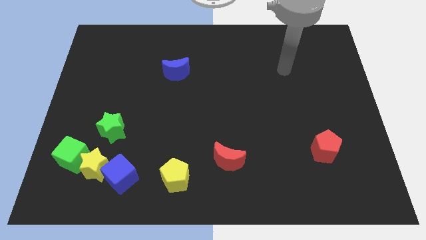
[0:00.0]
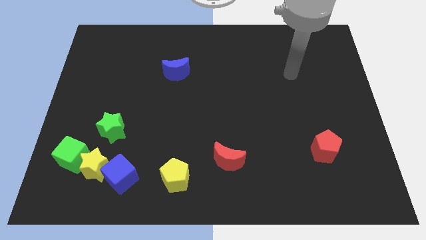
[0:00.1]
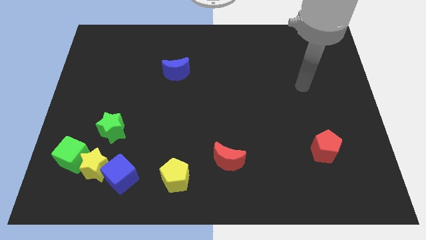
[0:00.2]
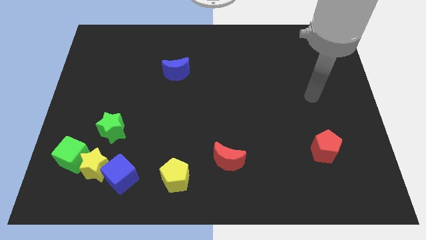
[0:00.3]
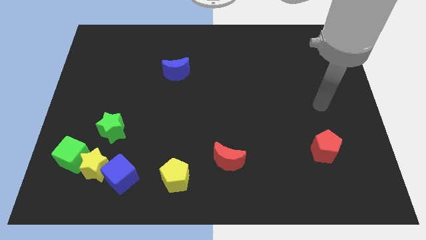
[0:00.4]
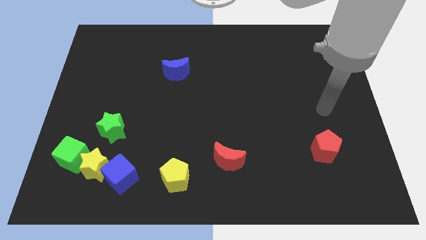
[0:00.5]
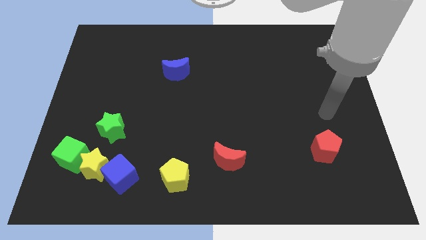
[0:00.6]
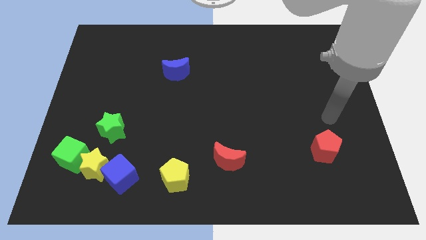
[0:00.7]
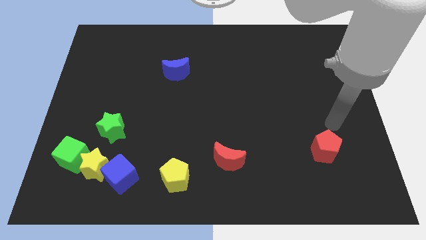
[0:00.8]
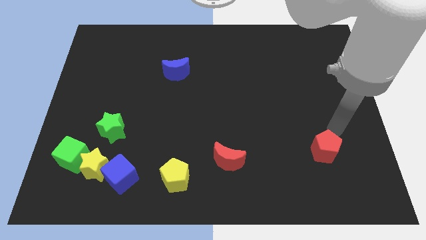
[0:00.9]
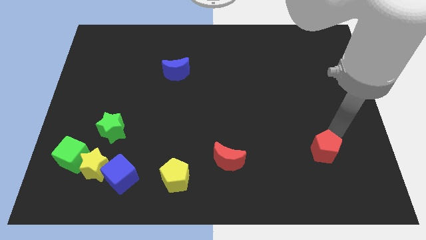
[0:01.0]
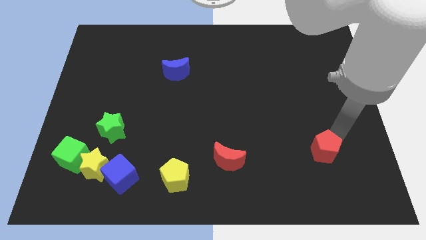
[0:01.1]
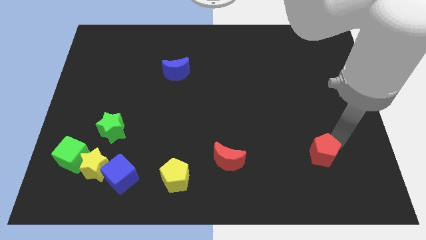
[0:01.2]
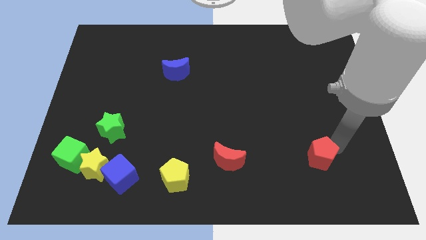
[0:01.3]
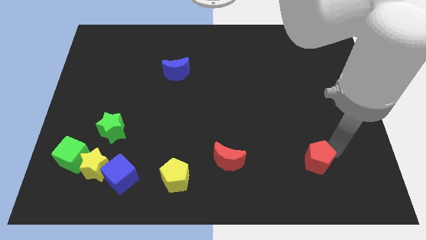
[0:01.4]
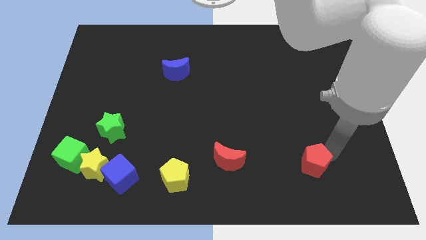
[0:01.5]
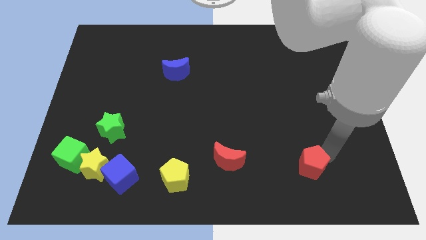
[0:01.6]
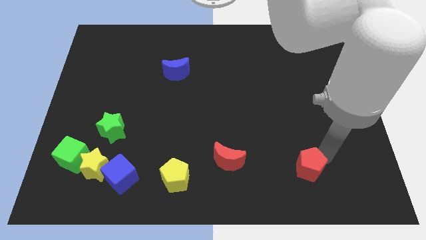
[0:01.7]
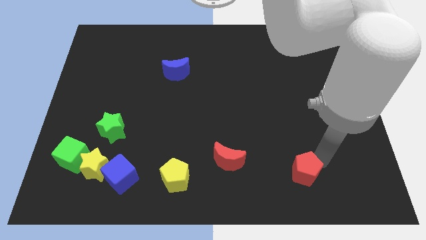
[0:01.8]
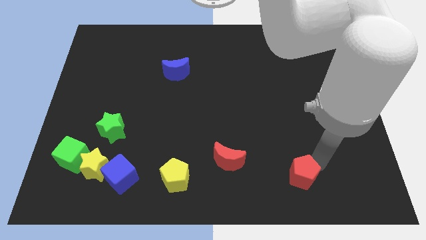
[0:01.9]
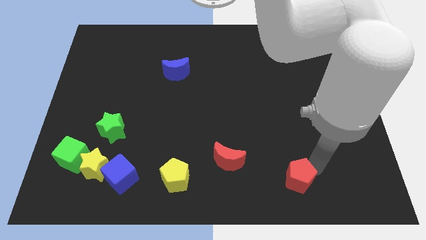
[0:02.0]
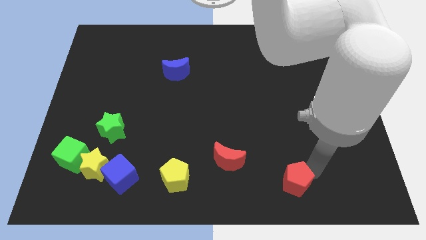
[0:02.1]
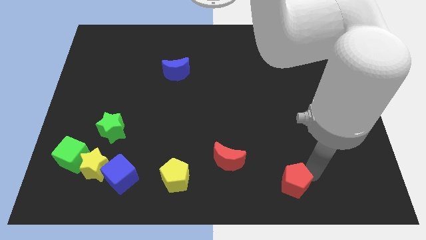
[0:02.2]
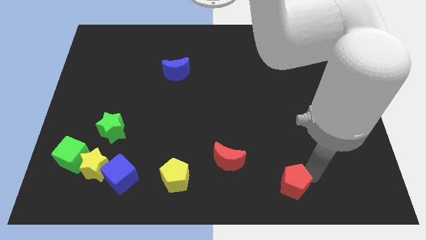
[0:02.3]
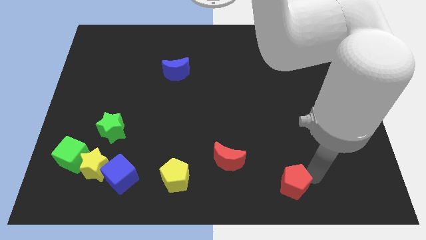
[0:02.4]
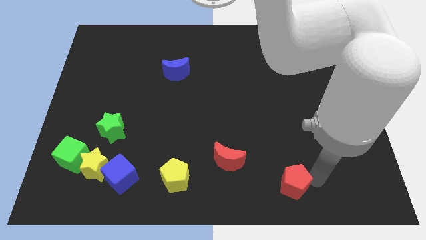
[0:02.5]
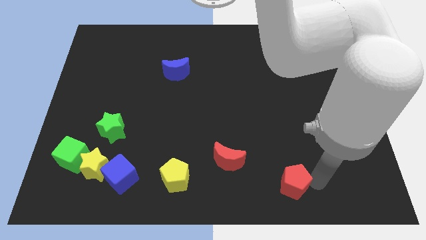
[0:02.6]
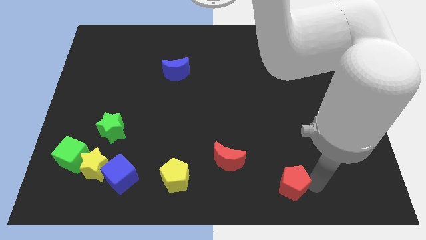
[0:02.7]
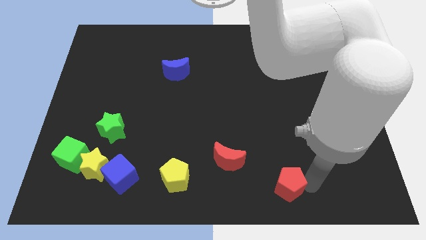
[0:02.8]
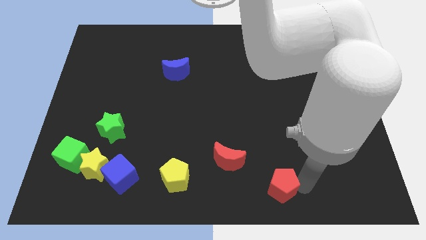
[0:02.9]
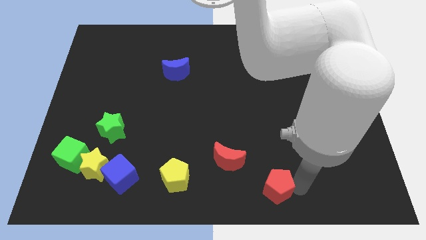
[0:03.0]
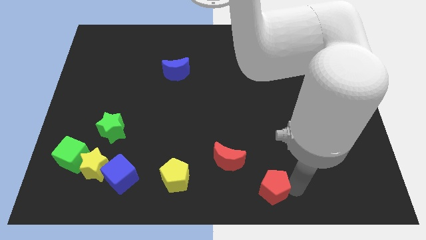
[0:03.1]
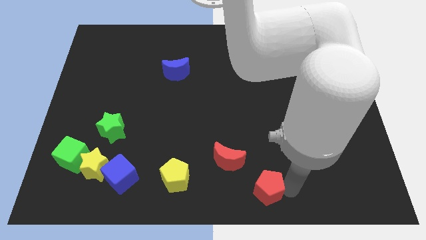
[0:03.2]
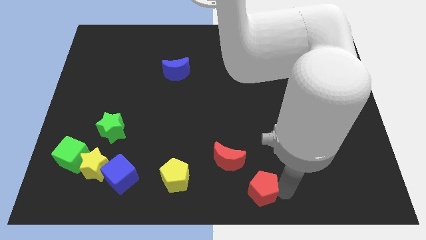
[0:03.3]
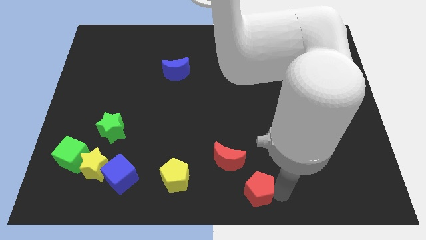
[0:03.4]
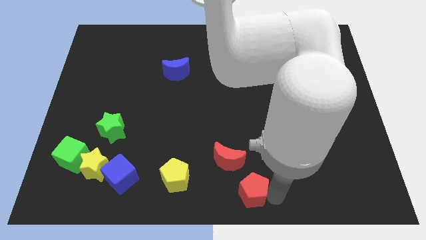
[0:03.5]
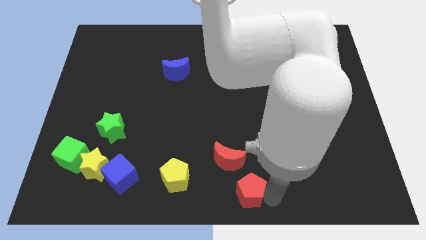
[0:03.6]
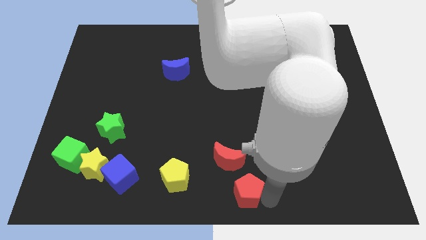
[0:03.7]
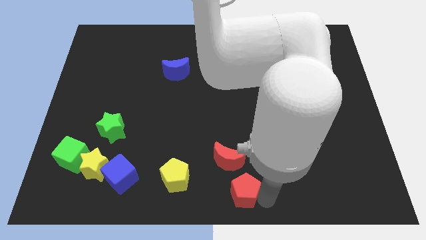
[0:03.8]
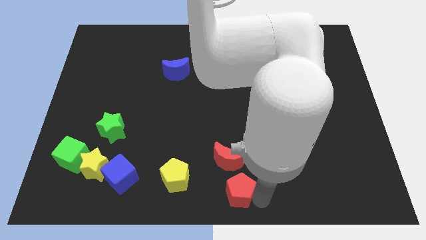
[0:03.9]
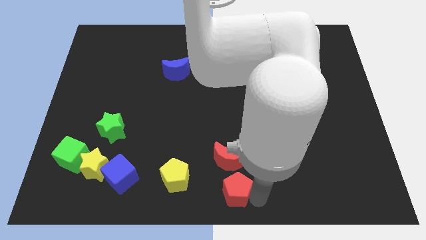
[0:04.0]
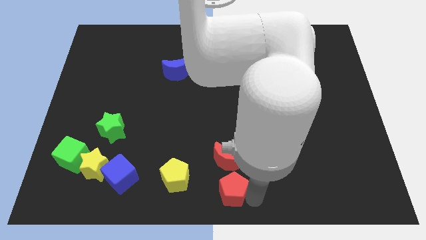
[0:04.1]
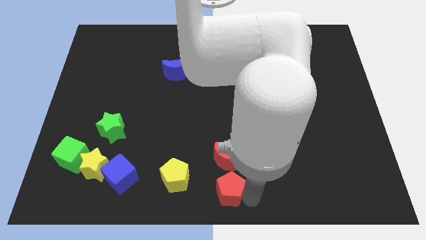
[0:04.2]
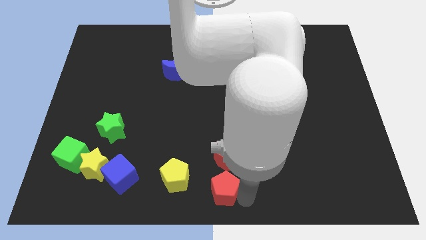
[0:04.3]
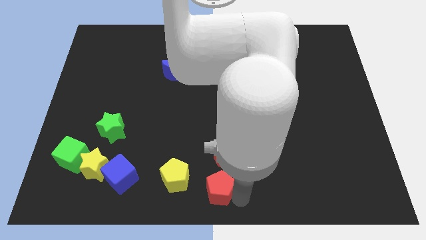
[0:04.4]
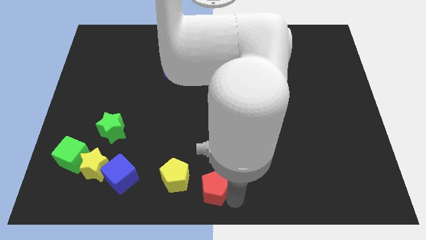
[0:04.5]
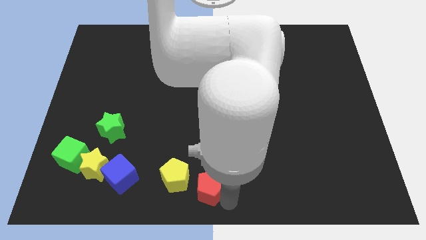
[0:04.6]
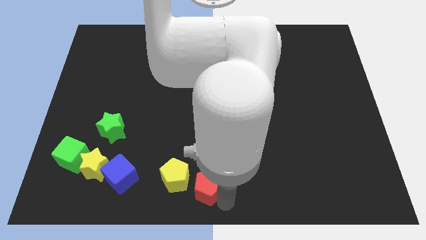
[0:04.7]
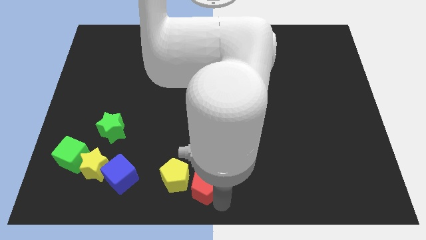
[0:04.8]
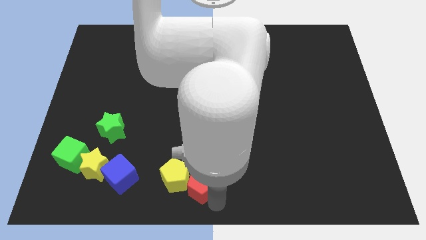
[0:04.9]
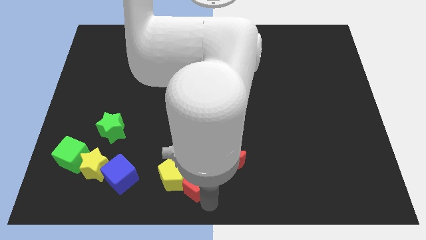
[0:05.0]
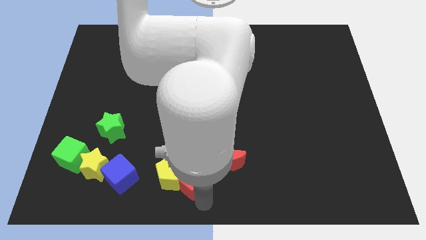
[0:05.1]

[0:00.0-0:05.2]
slide the red pentagon towards the yellow pentagon

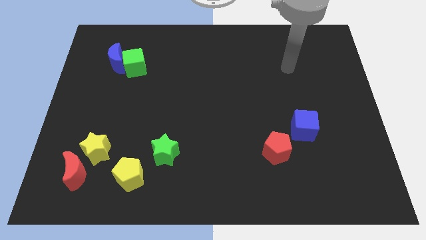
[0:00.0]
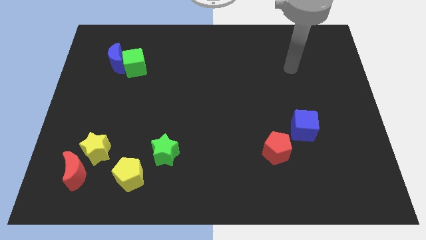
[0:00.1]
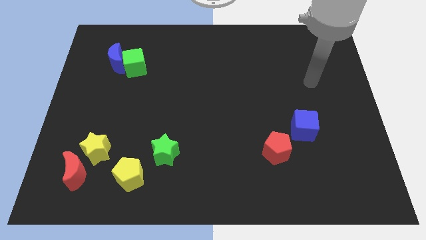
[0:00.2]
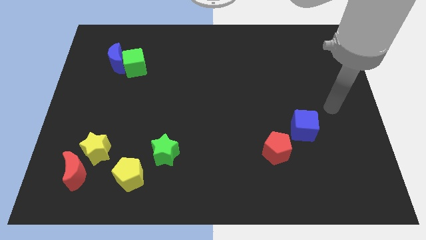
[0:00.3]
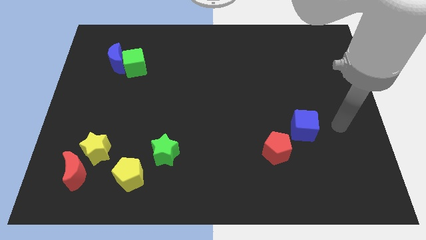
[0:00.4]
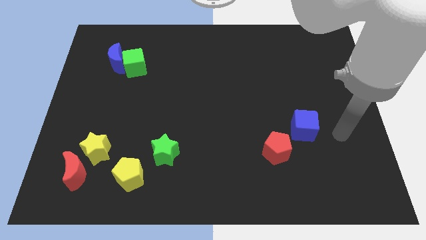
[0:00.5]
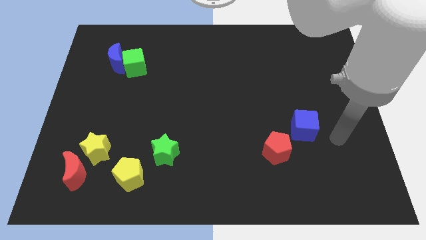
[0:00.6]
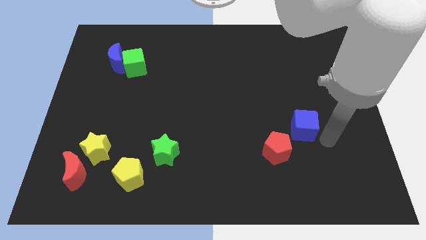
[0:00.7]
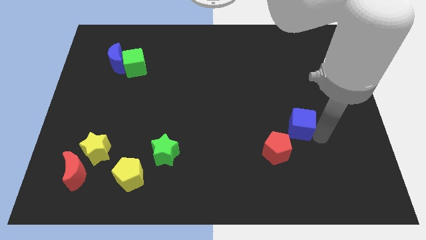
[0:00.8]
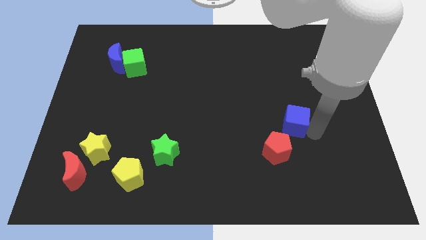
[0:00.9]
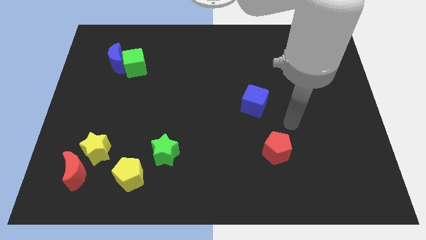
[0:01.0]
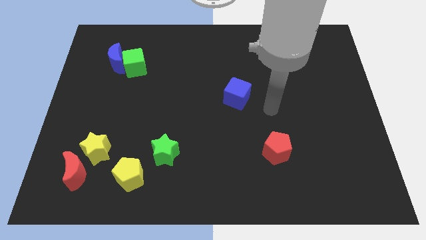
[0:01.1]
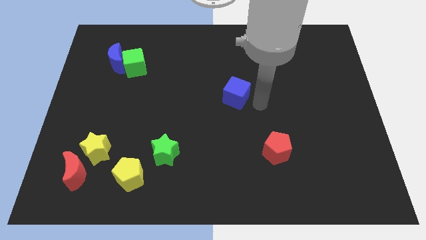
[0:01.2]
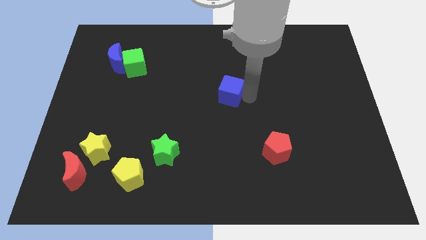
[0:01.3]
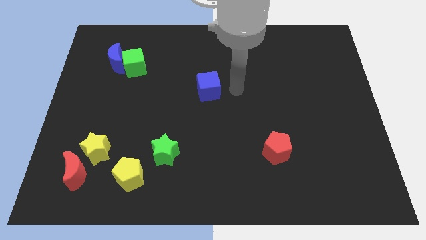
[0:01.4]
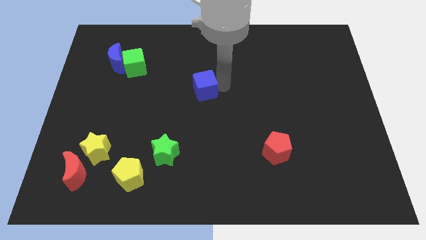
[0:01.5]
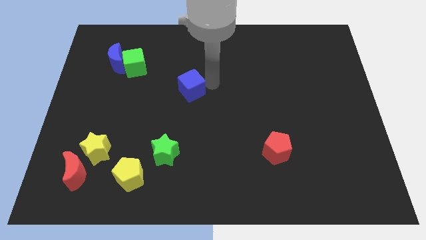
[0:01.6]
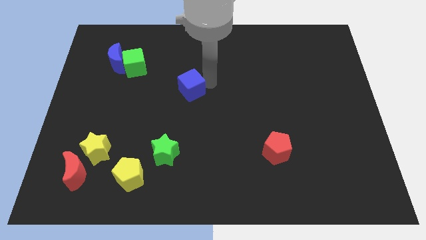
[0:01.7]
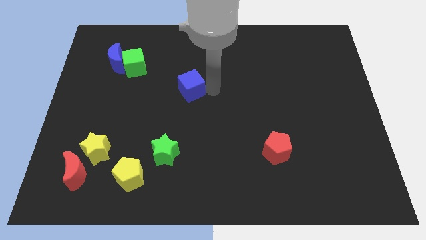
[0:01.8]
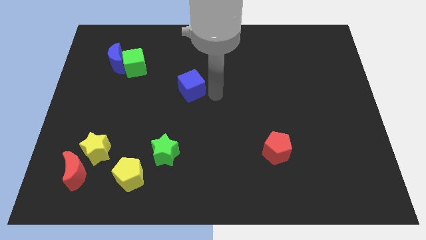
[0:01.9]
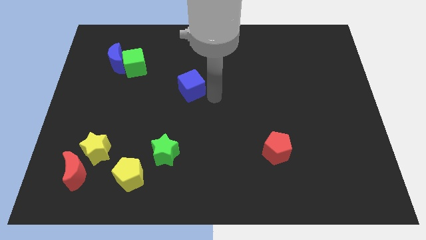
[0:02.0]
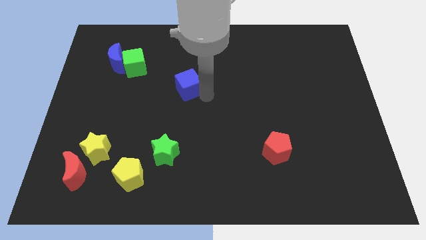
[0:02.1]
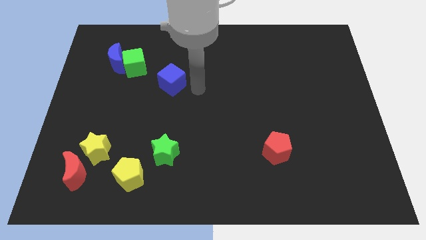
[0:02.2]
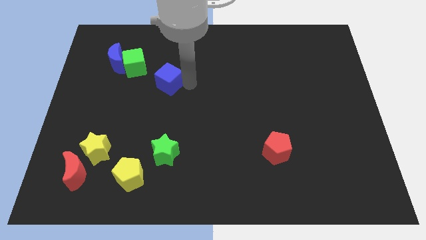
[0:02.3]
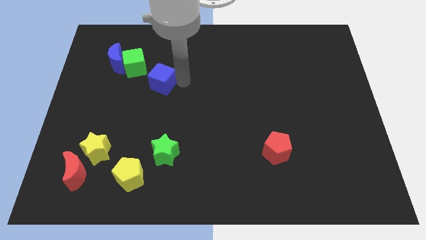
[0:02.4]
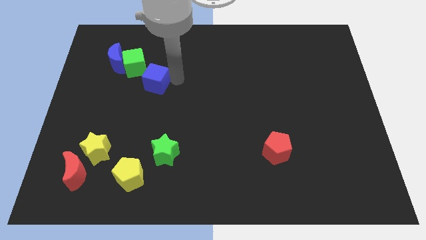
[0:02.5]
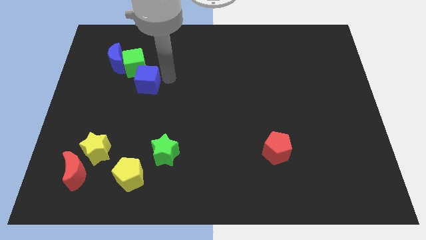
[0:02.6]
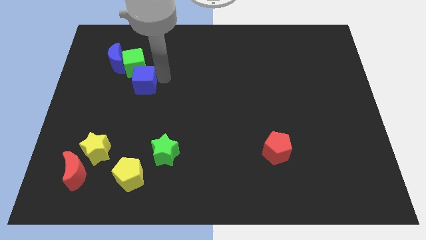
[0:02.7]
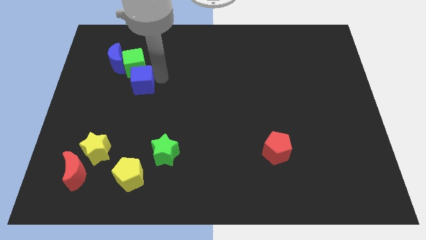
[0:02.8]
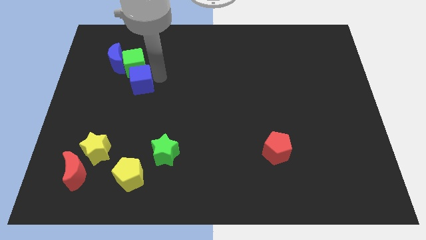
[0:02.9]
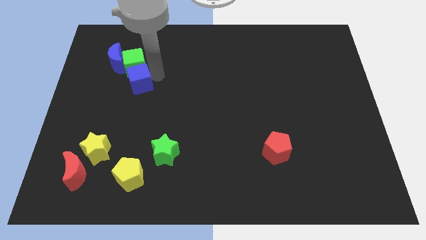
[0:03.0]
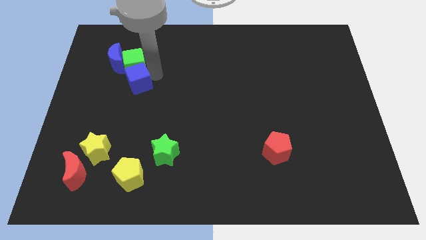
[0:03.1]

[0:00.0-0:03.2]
put the blue cube towards the green cube
